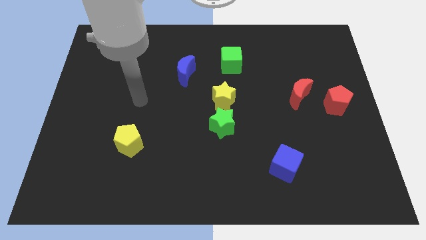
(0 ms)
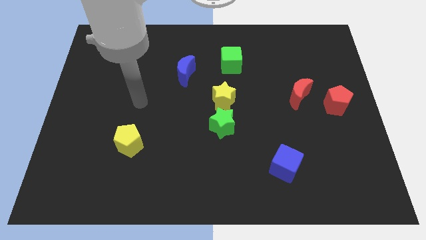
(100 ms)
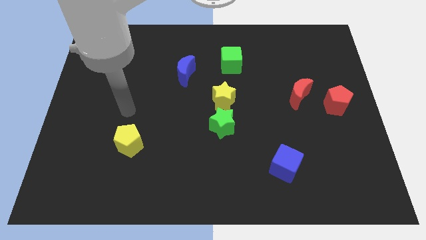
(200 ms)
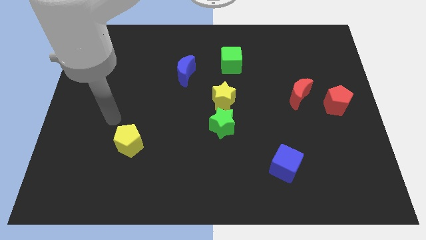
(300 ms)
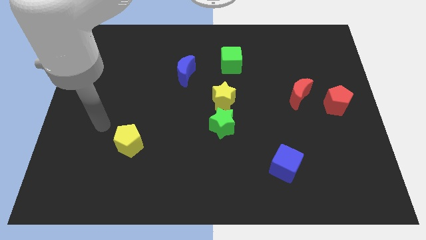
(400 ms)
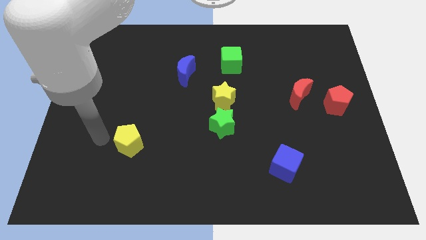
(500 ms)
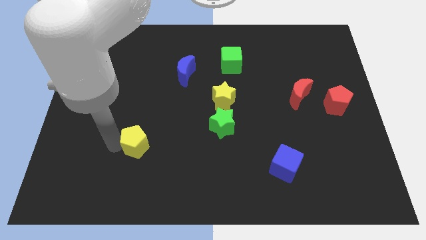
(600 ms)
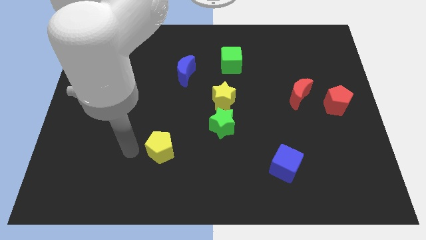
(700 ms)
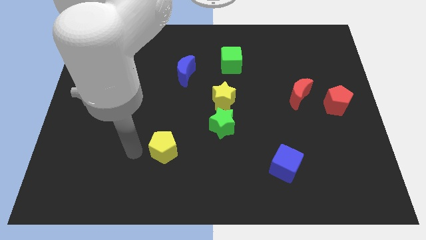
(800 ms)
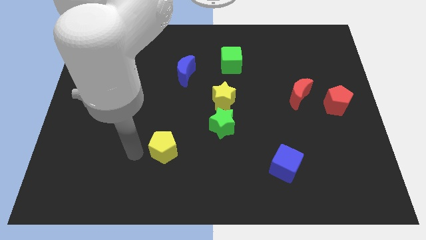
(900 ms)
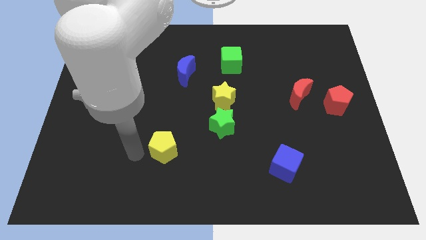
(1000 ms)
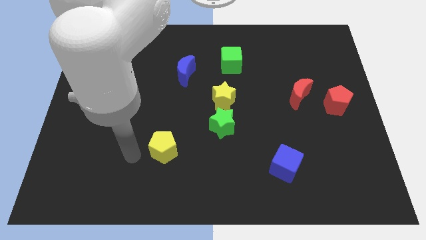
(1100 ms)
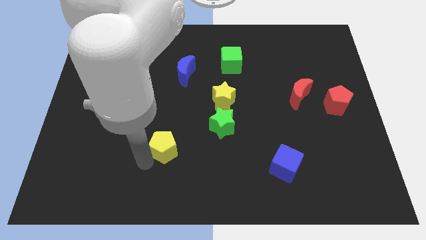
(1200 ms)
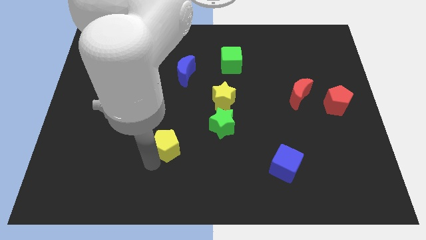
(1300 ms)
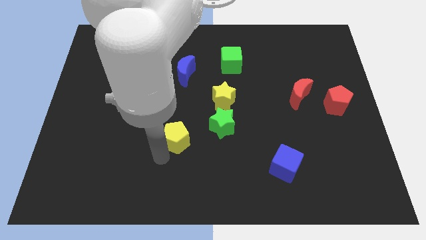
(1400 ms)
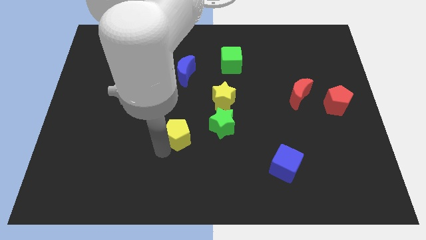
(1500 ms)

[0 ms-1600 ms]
slightly move the yellow pentagon to the top of the board

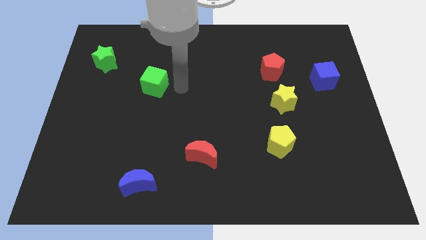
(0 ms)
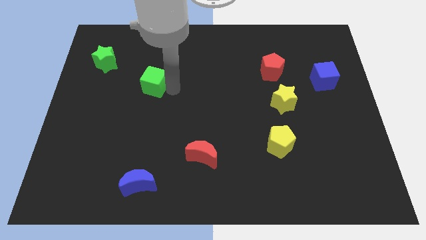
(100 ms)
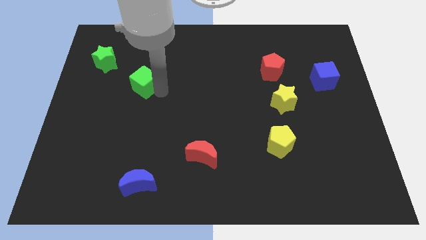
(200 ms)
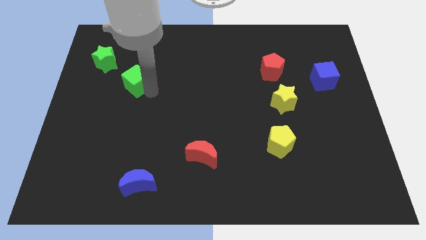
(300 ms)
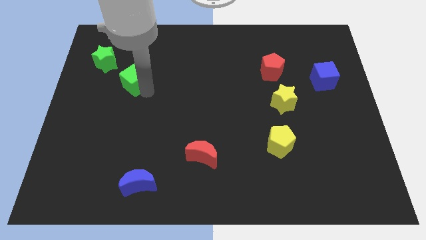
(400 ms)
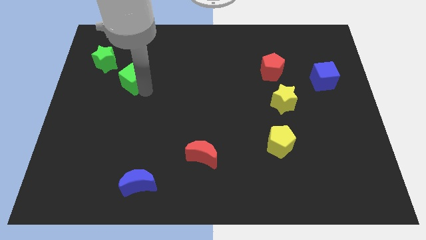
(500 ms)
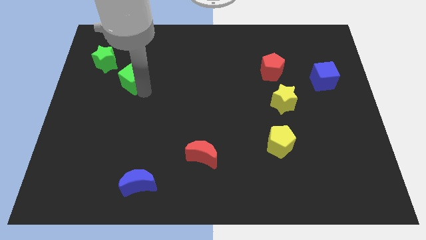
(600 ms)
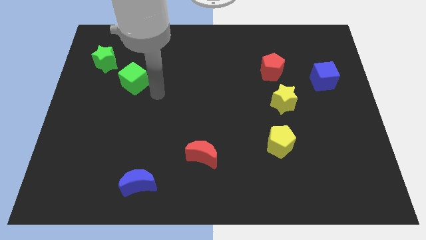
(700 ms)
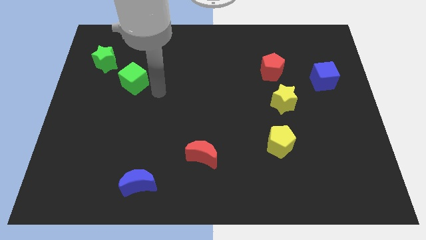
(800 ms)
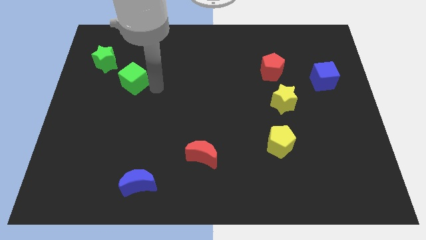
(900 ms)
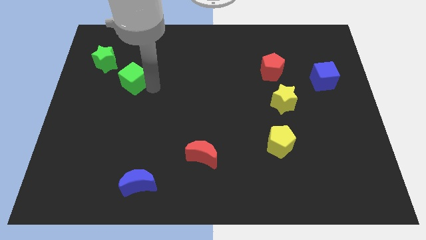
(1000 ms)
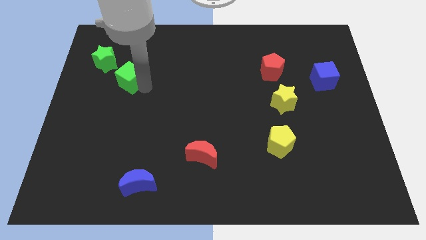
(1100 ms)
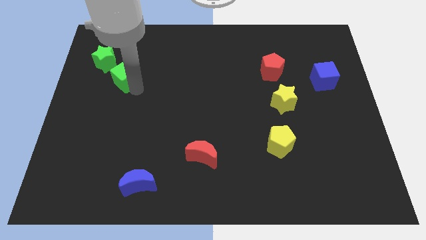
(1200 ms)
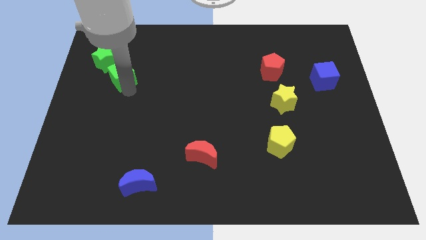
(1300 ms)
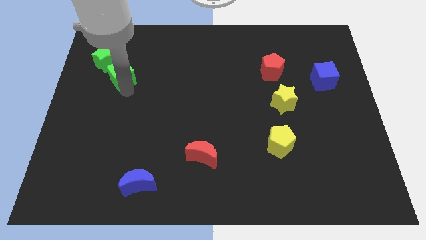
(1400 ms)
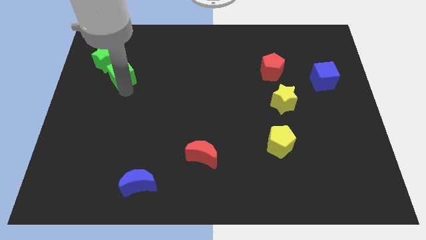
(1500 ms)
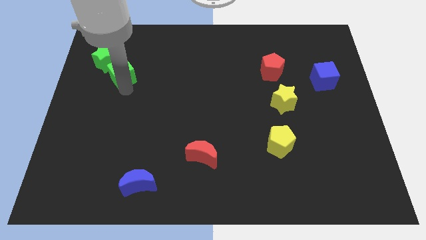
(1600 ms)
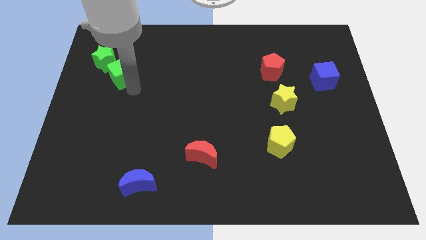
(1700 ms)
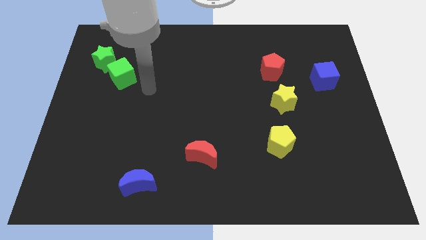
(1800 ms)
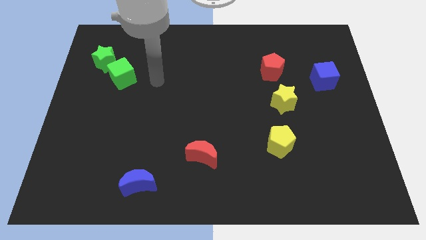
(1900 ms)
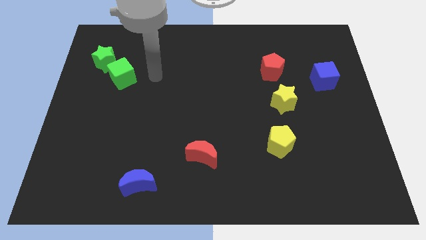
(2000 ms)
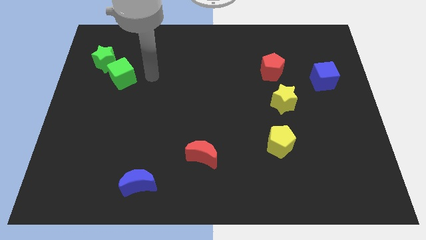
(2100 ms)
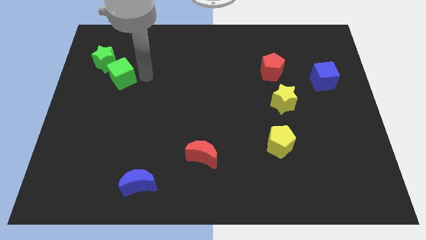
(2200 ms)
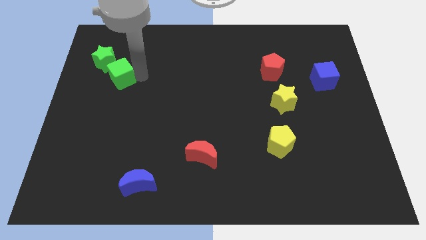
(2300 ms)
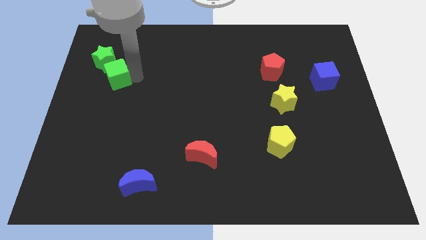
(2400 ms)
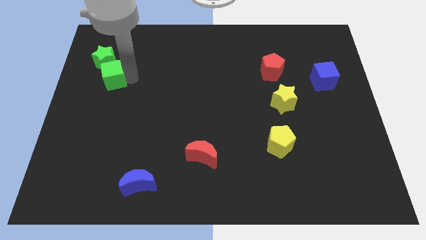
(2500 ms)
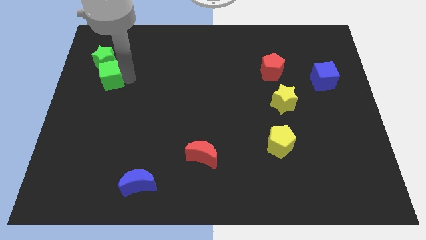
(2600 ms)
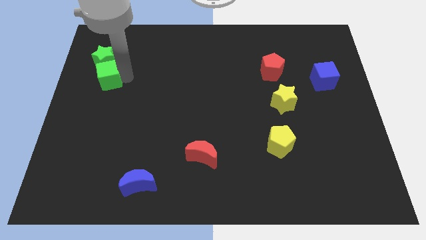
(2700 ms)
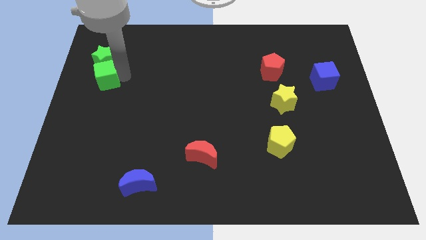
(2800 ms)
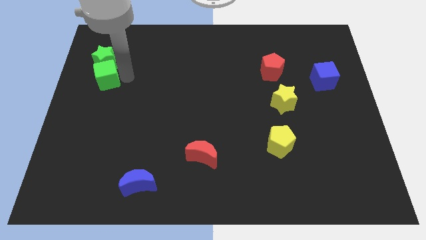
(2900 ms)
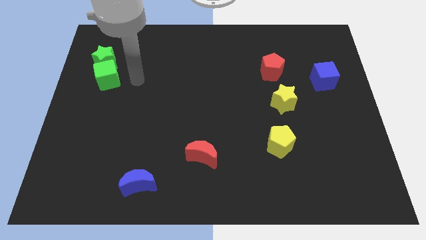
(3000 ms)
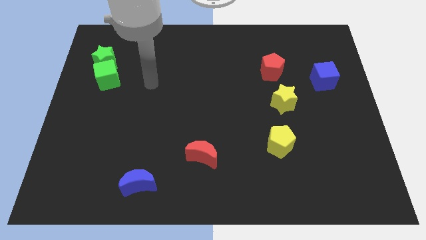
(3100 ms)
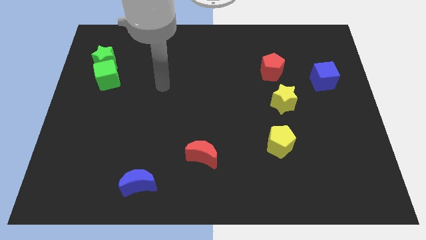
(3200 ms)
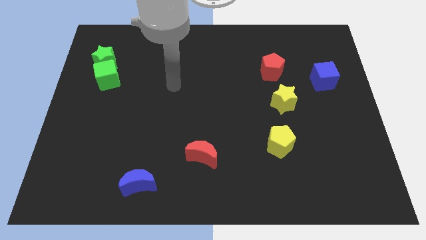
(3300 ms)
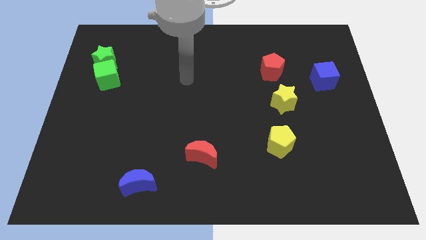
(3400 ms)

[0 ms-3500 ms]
move the green cube into the green star

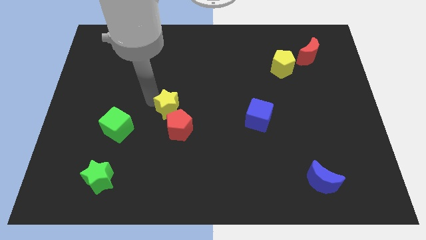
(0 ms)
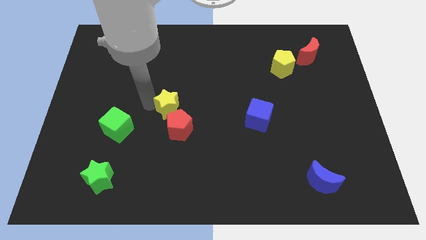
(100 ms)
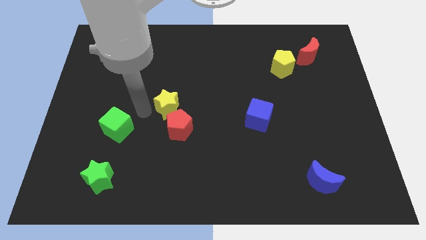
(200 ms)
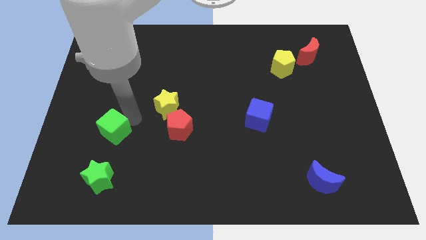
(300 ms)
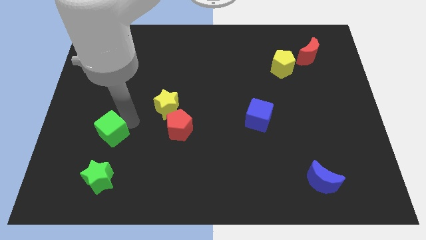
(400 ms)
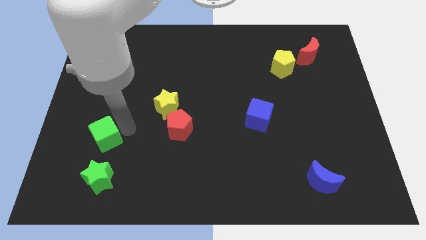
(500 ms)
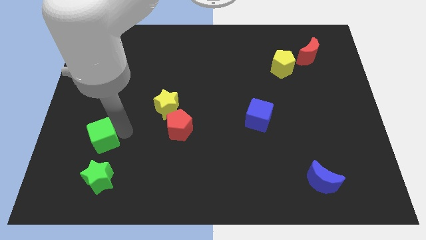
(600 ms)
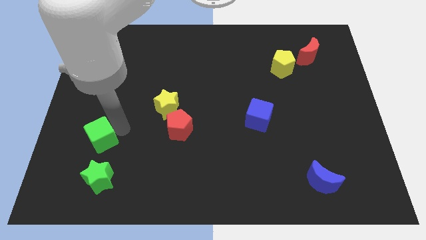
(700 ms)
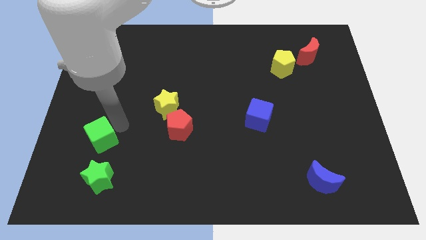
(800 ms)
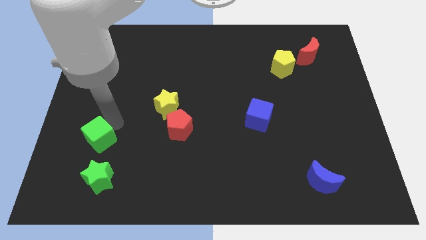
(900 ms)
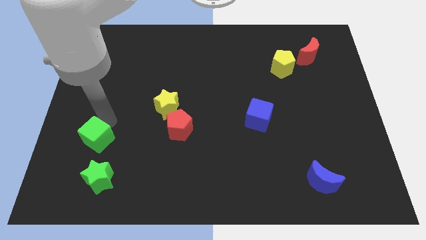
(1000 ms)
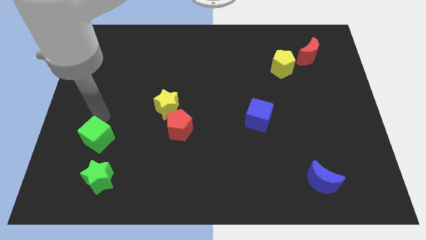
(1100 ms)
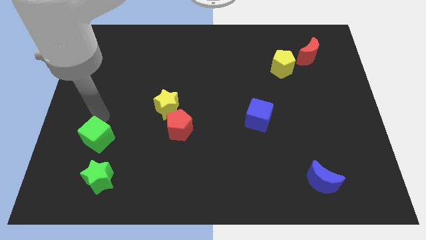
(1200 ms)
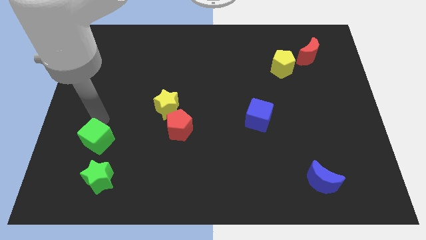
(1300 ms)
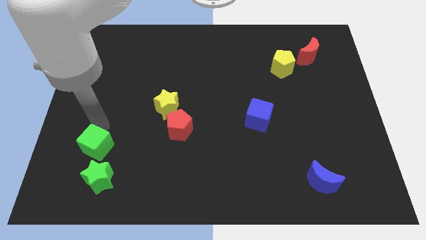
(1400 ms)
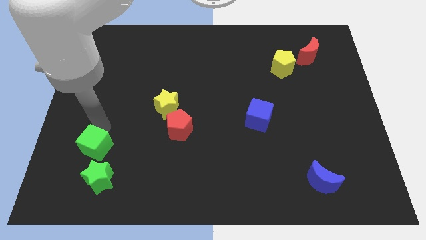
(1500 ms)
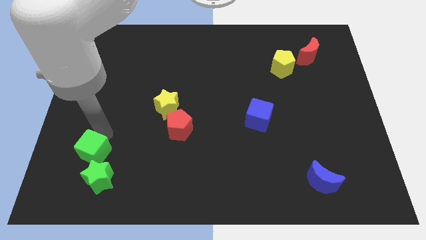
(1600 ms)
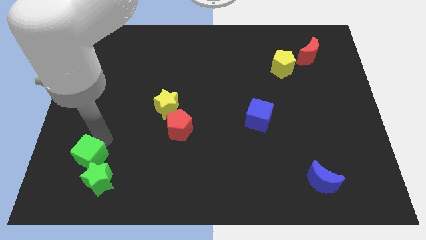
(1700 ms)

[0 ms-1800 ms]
push the green cube top of the green star

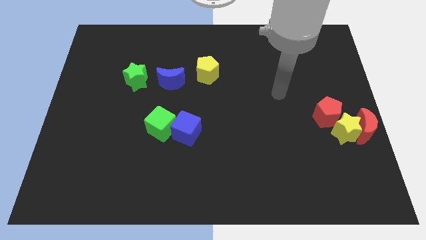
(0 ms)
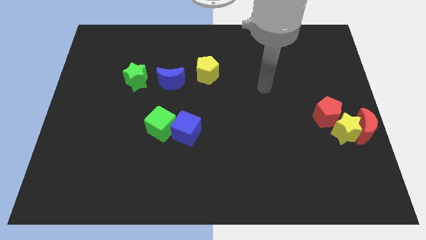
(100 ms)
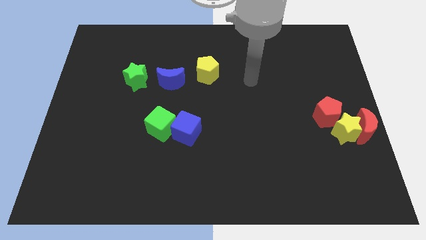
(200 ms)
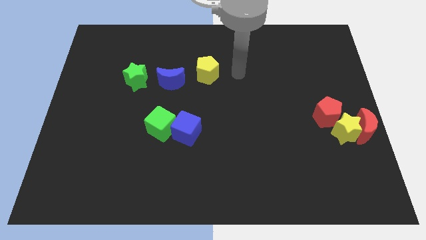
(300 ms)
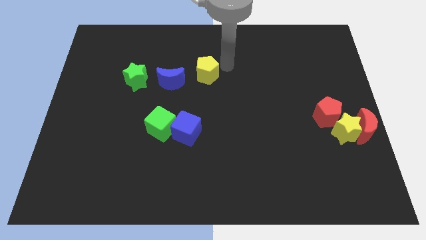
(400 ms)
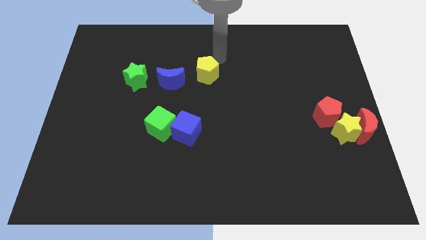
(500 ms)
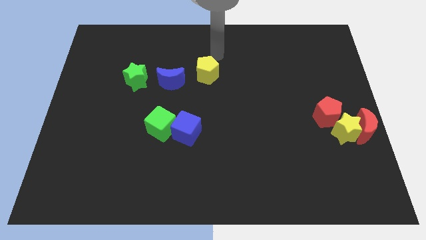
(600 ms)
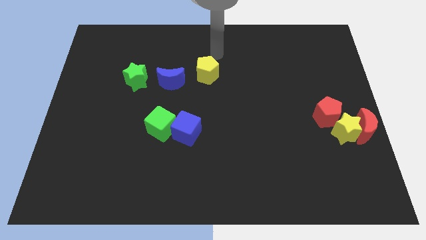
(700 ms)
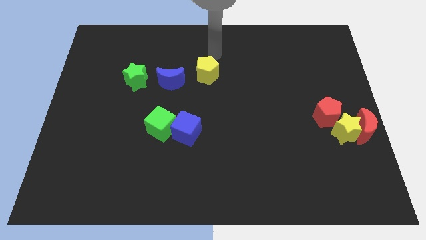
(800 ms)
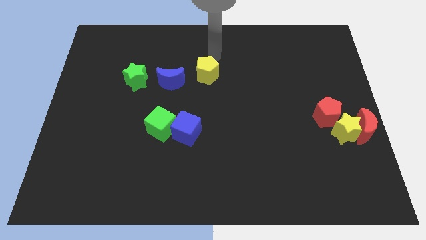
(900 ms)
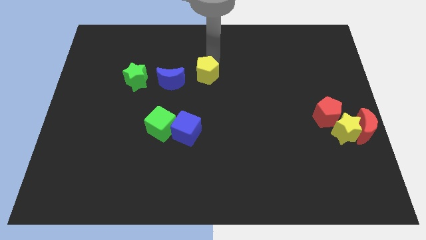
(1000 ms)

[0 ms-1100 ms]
place your arm above the yellow pentagon

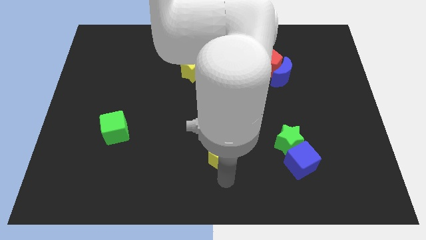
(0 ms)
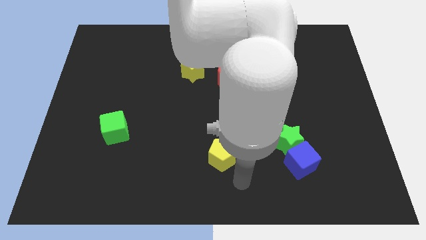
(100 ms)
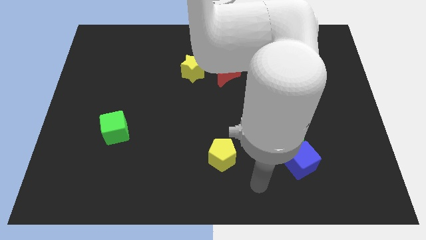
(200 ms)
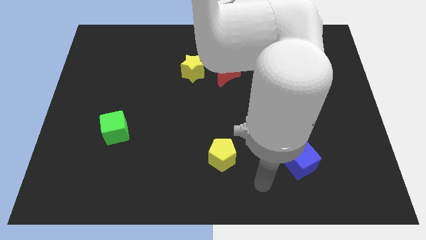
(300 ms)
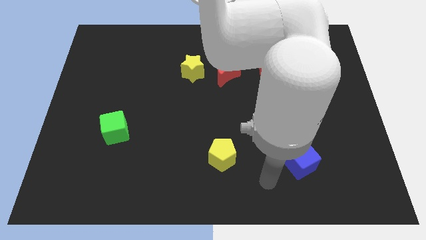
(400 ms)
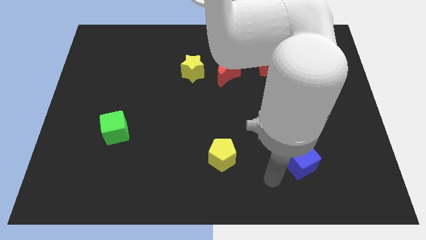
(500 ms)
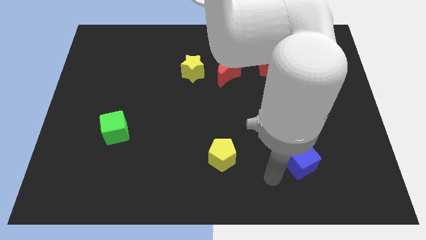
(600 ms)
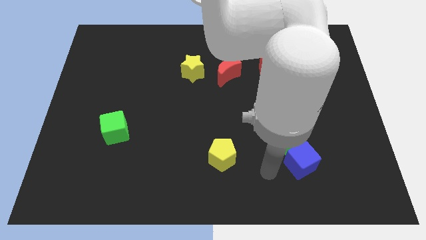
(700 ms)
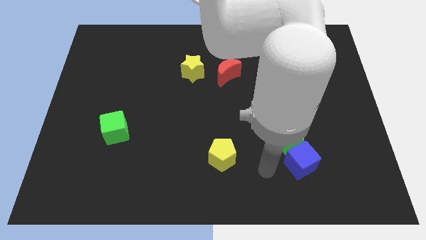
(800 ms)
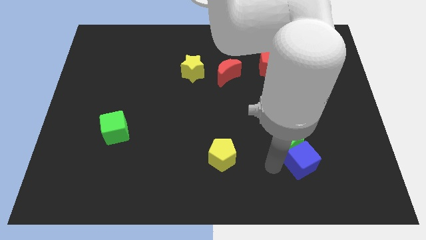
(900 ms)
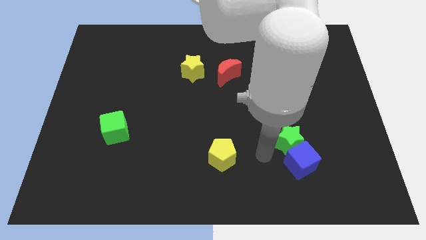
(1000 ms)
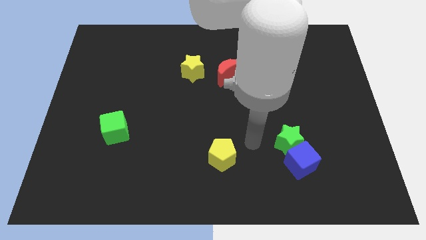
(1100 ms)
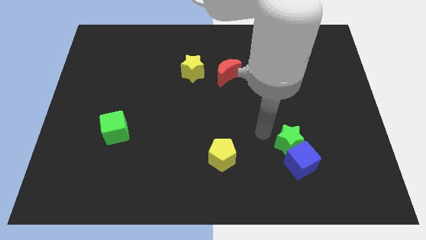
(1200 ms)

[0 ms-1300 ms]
move your arm towards the green star
